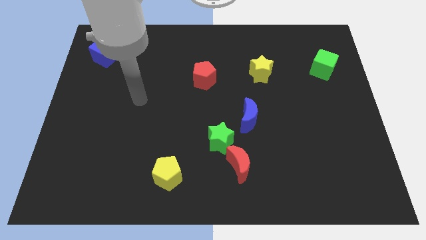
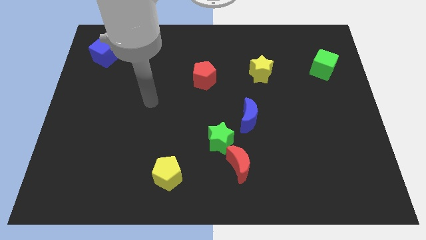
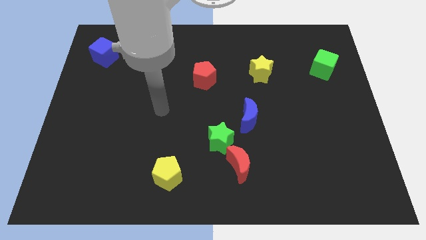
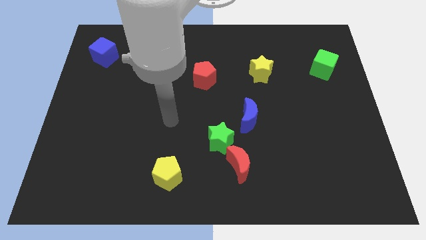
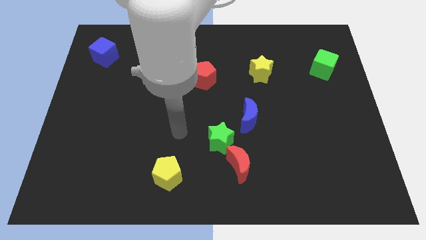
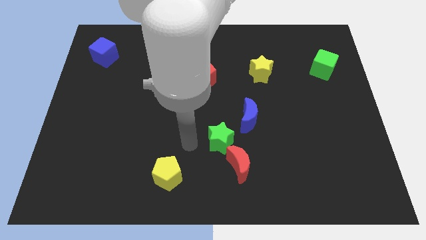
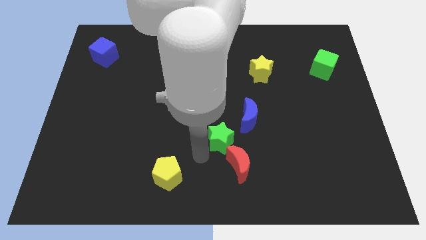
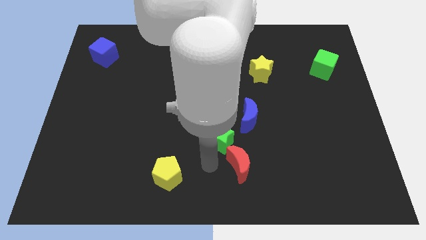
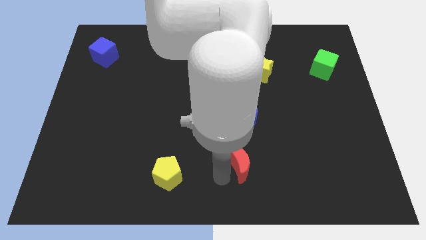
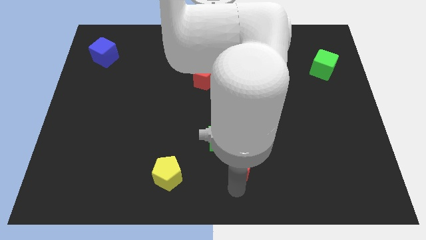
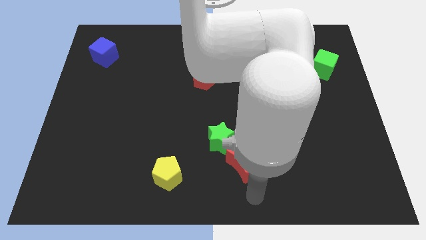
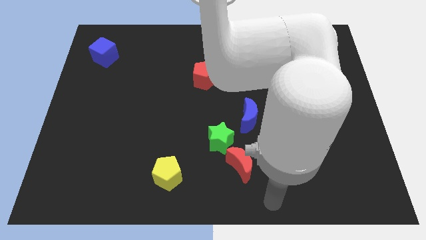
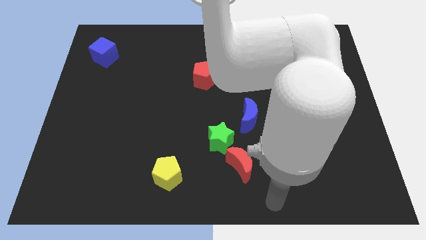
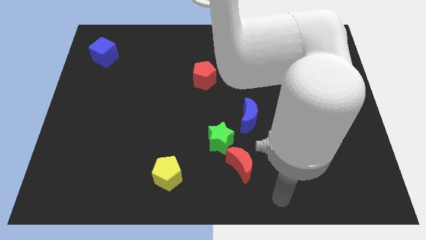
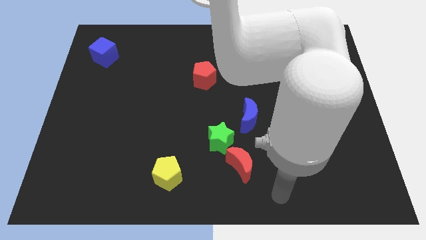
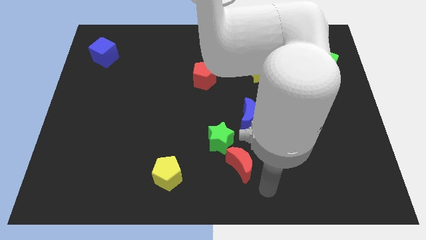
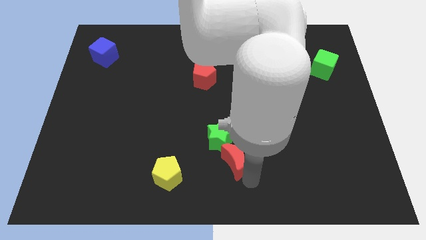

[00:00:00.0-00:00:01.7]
move your arm close to the red moon

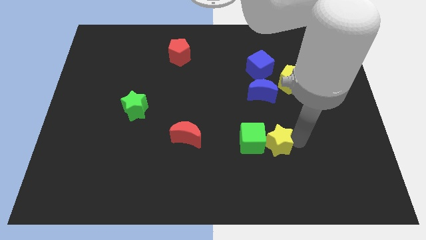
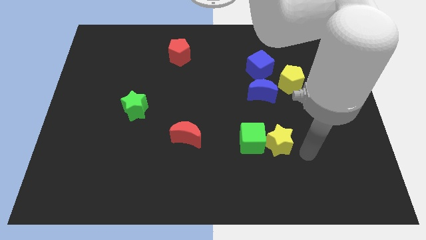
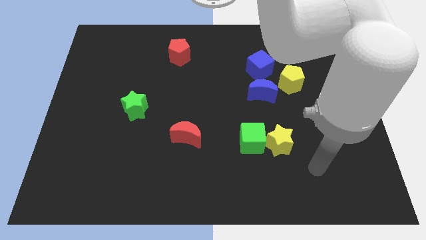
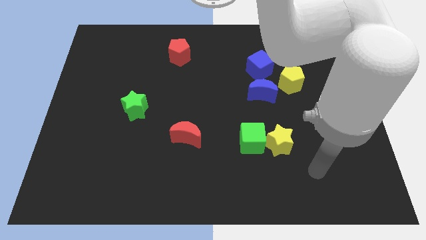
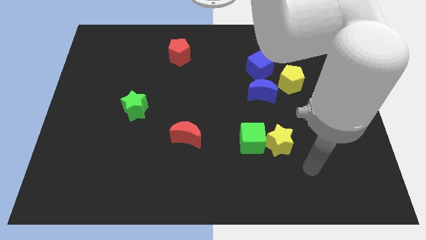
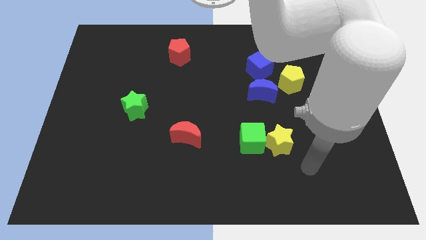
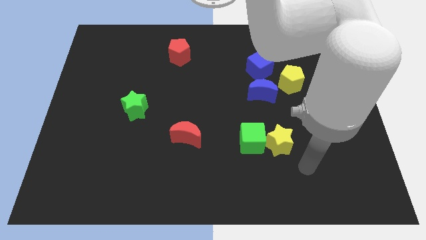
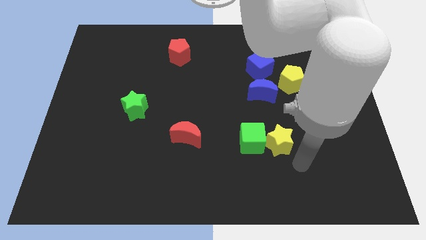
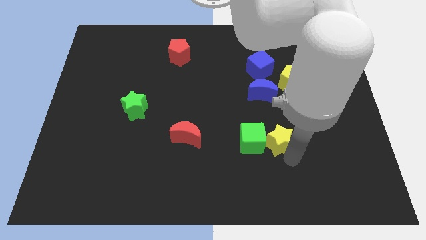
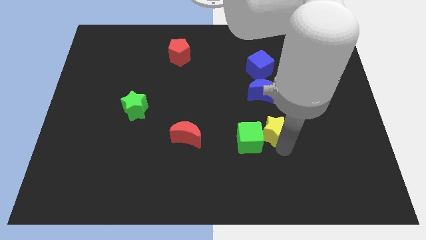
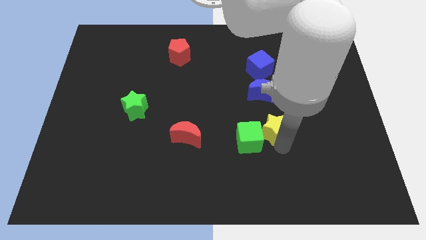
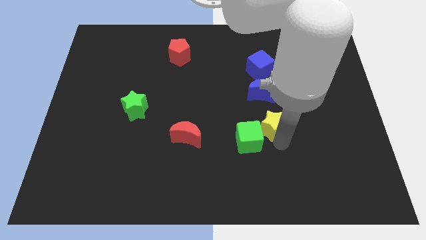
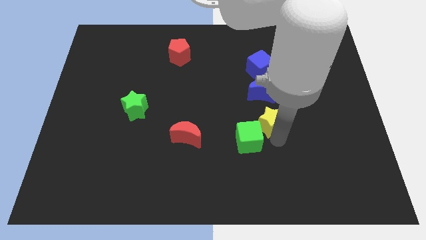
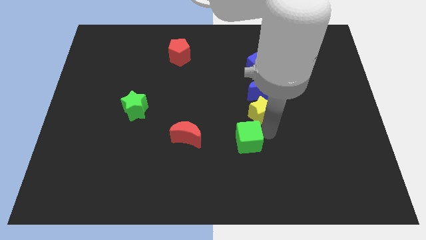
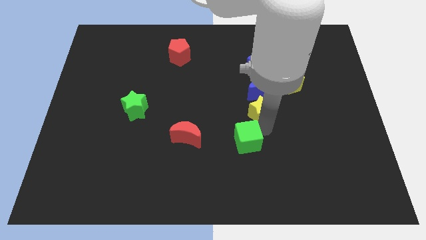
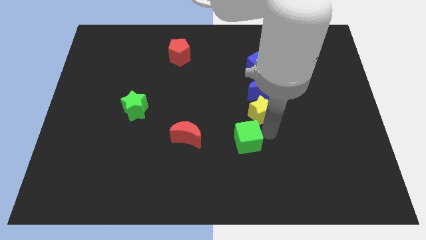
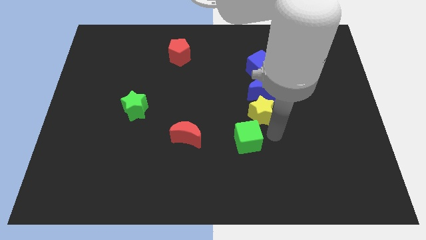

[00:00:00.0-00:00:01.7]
put the yellow star in between green cube and blue crescent

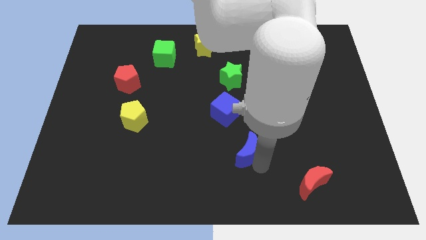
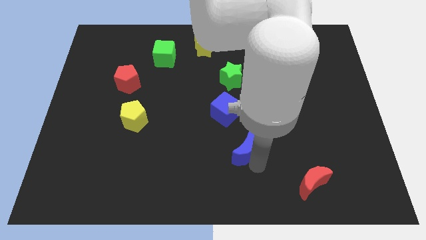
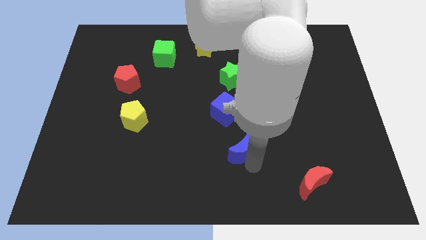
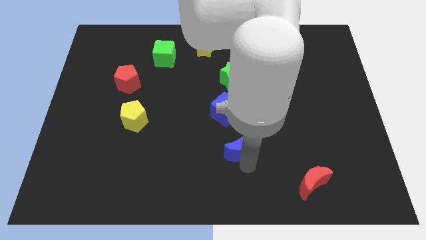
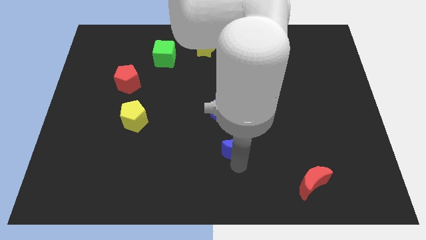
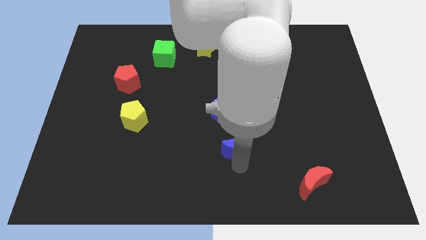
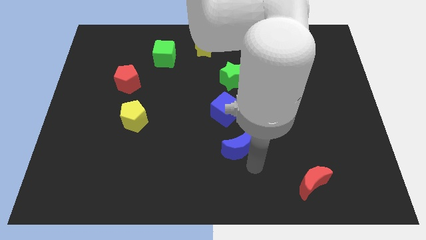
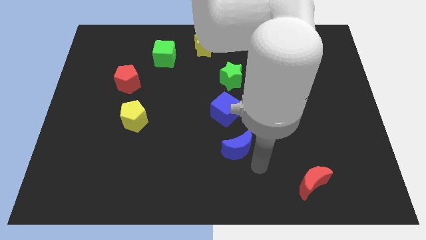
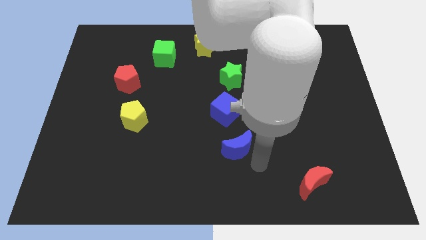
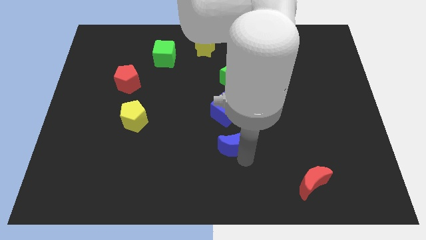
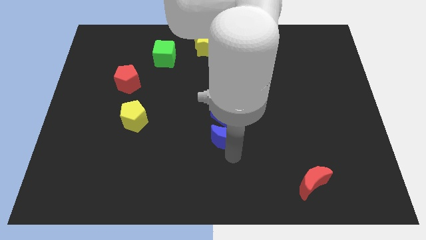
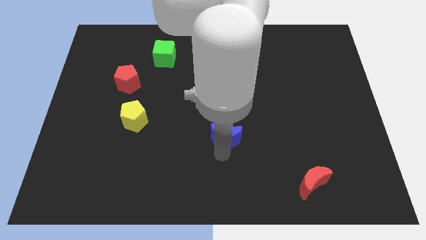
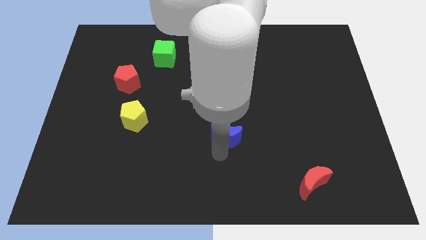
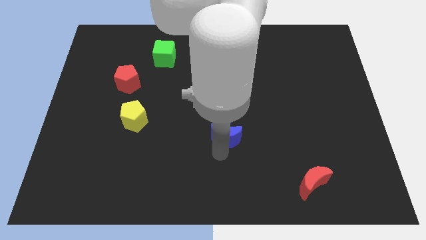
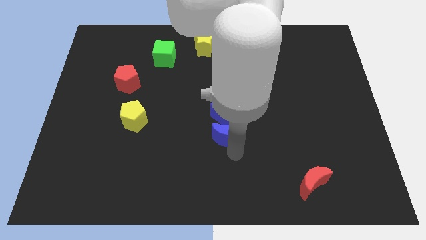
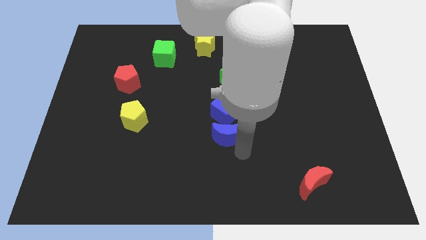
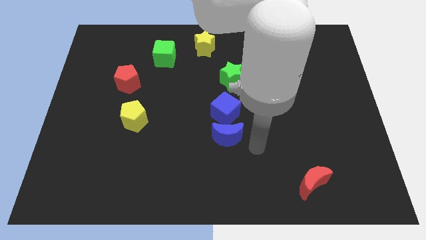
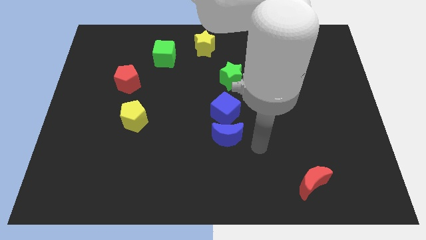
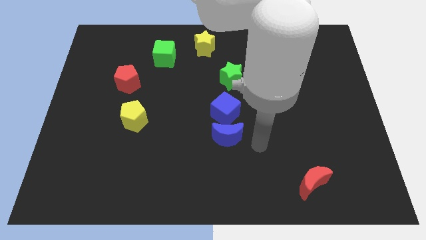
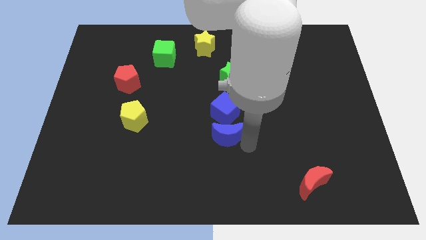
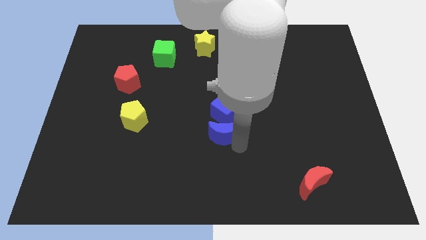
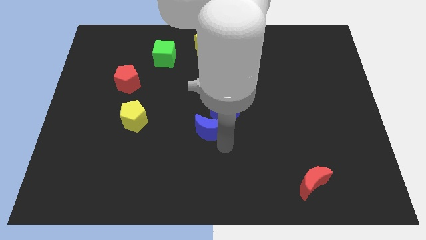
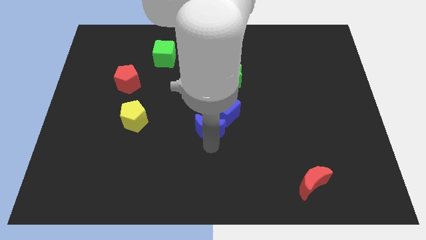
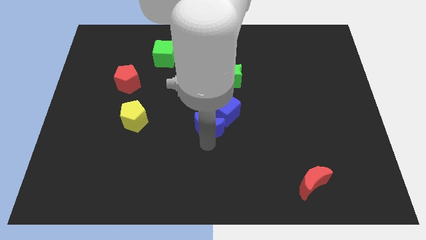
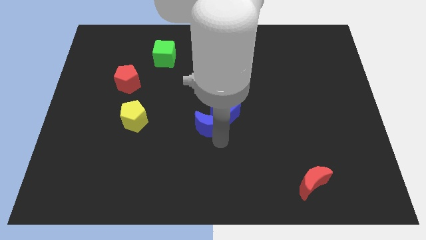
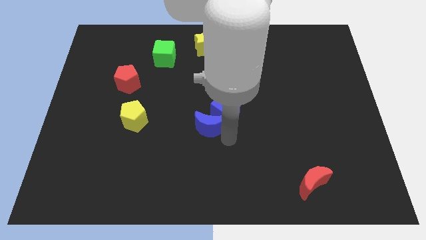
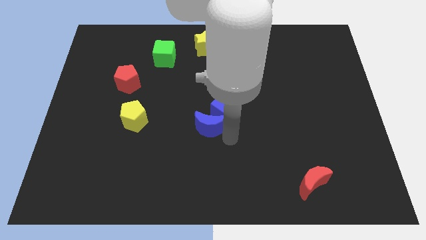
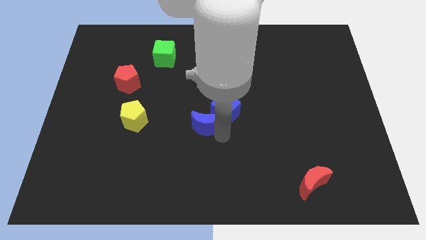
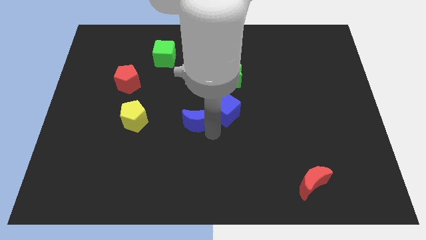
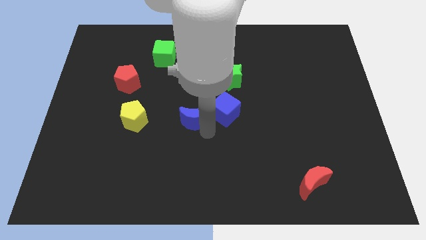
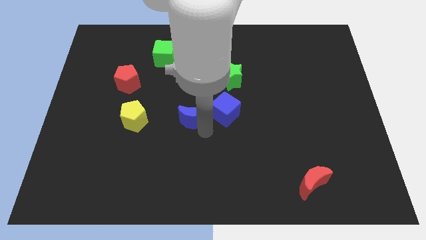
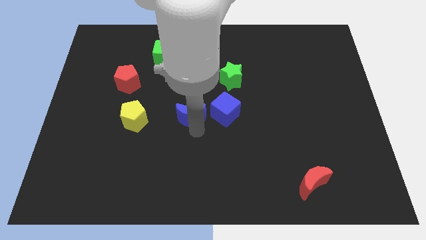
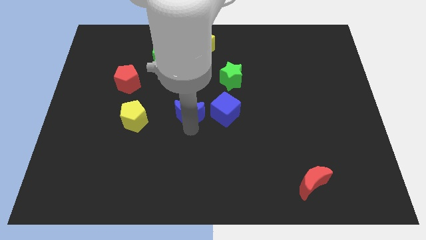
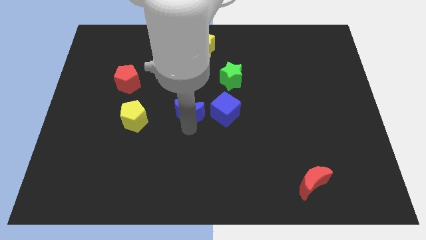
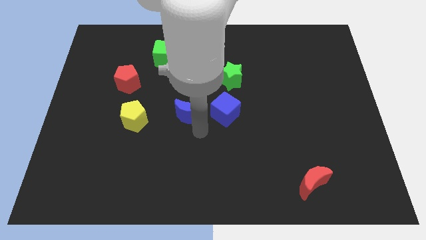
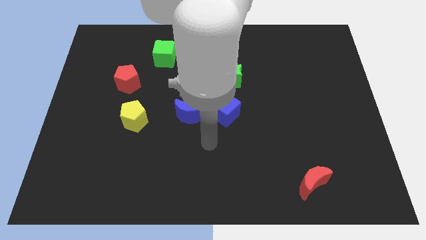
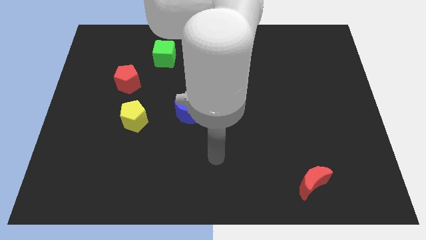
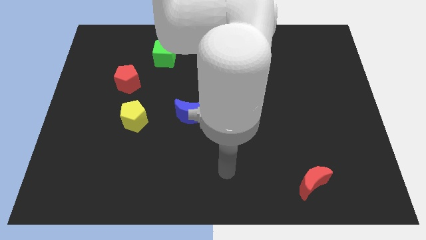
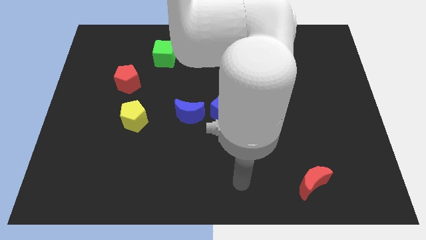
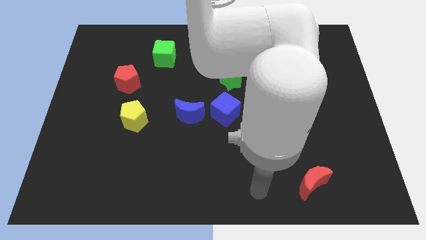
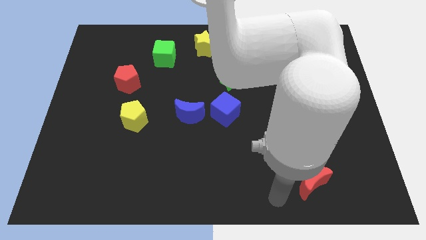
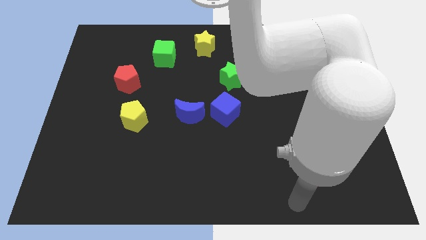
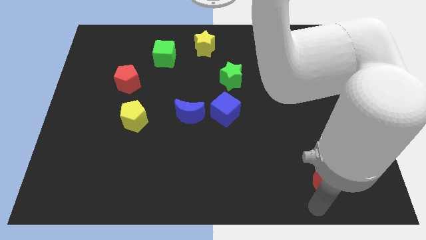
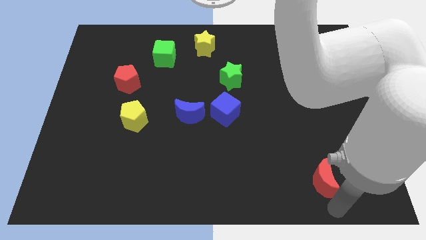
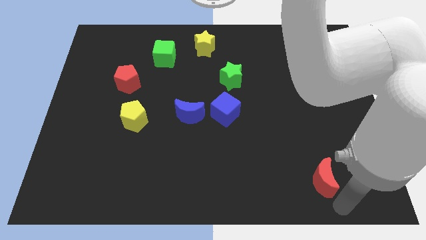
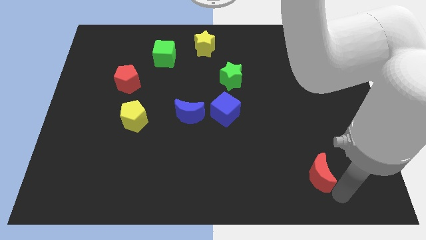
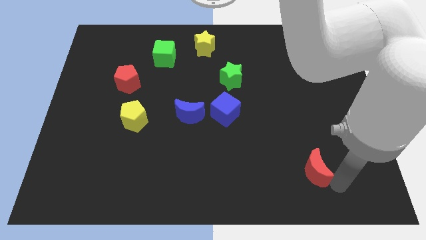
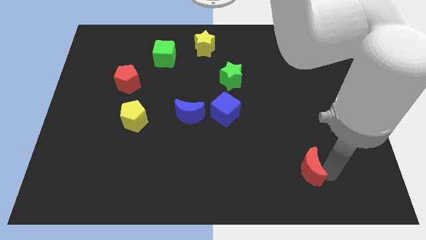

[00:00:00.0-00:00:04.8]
place the blue crescent to the left side of the blue cube

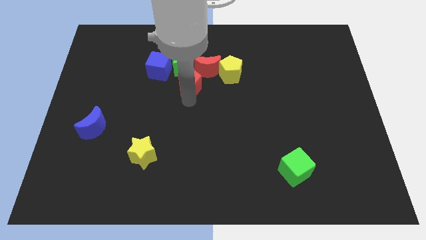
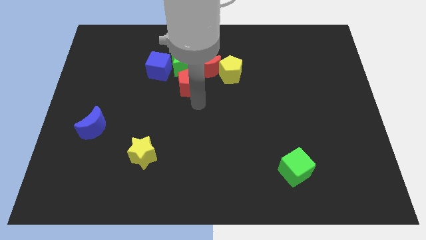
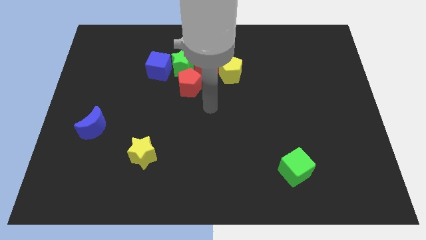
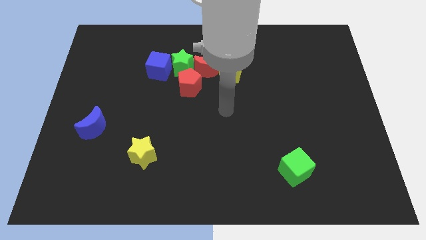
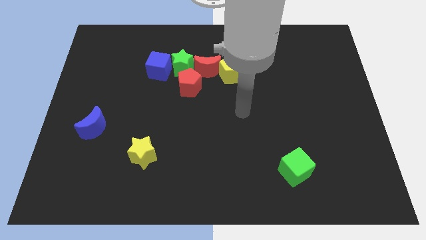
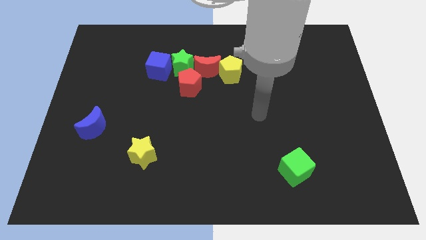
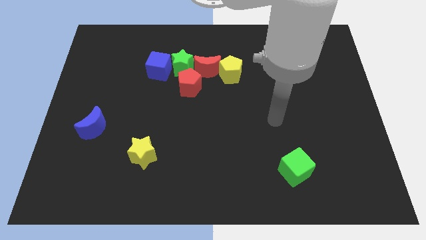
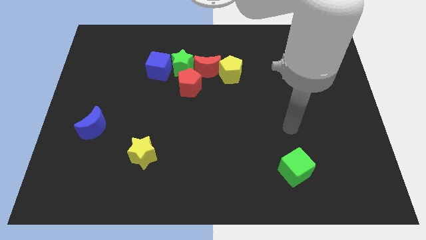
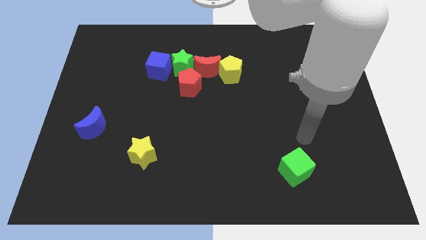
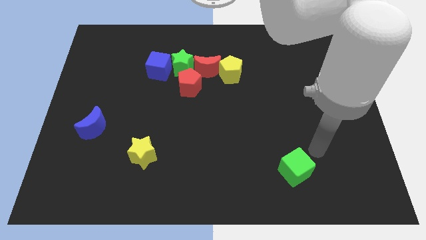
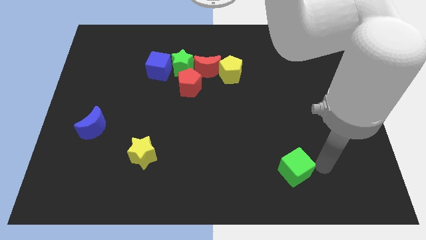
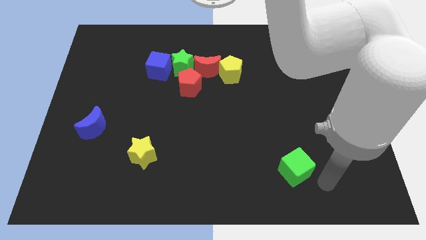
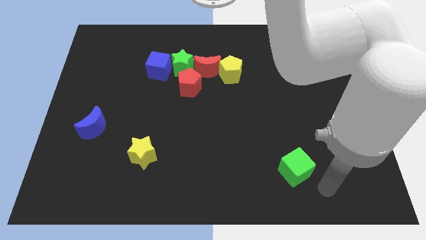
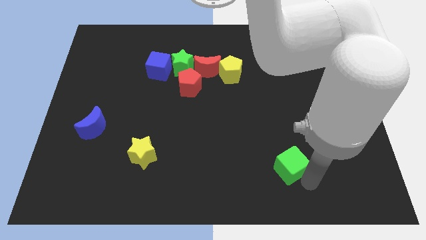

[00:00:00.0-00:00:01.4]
touch the bottom of the green cube
